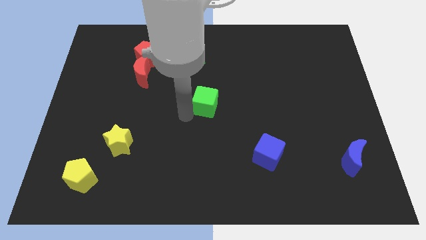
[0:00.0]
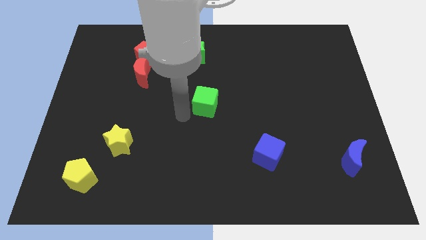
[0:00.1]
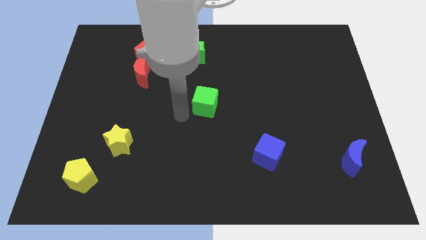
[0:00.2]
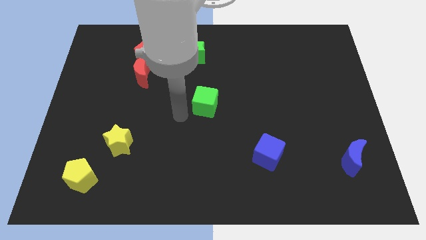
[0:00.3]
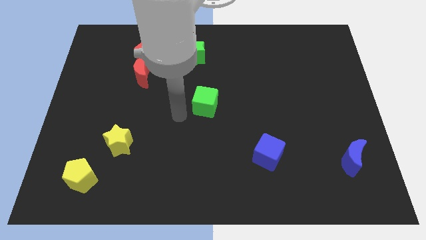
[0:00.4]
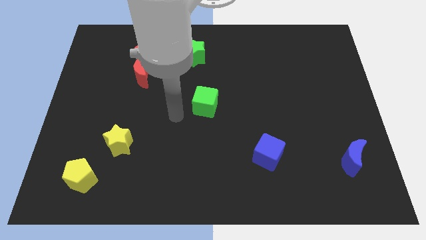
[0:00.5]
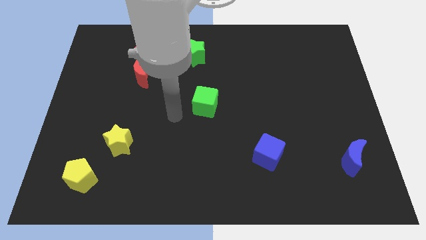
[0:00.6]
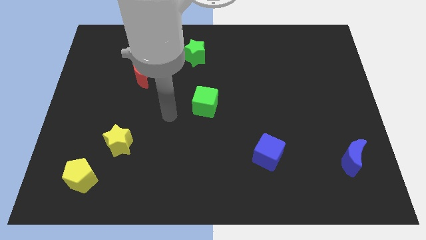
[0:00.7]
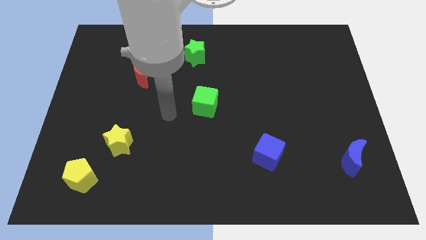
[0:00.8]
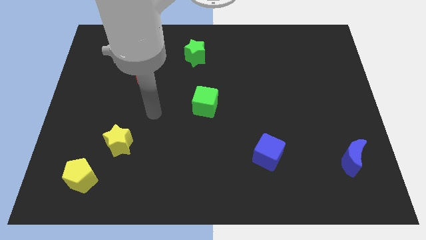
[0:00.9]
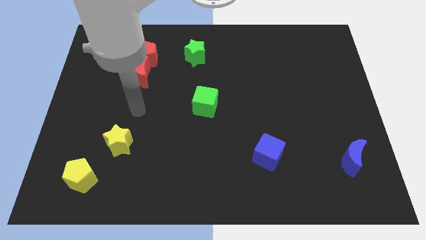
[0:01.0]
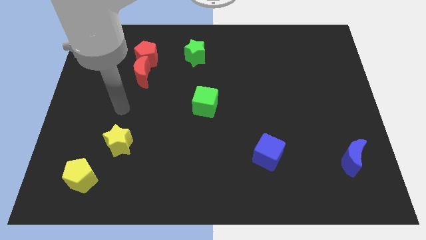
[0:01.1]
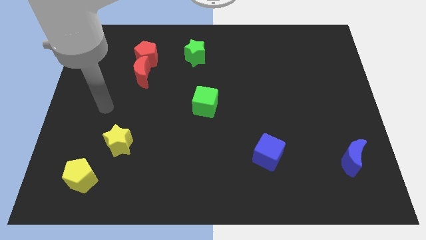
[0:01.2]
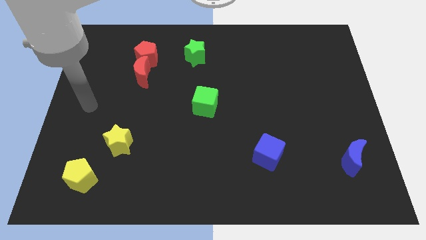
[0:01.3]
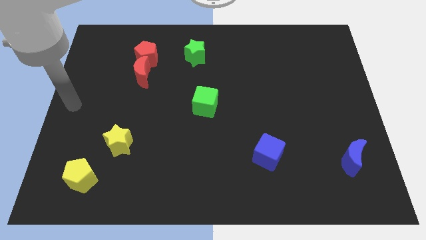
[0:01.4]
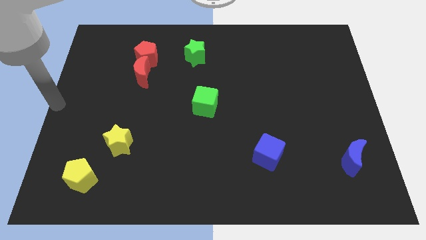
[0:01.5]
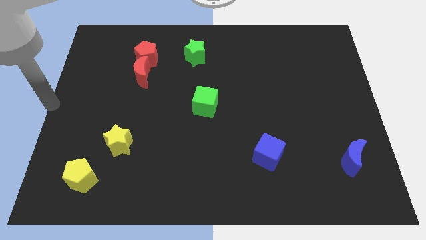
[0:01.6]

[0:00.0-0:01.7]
move your hand to the center left of the board

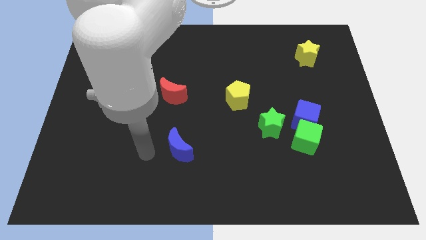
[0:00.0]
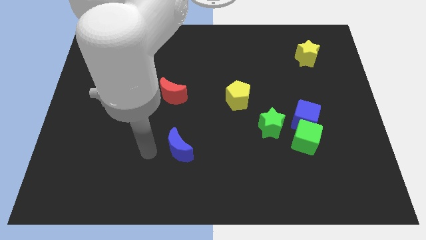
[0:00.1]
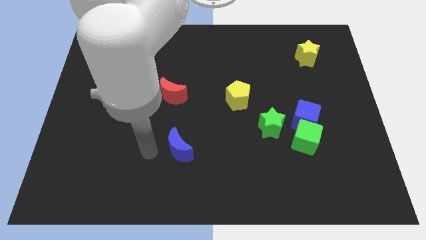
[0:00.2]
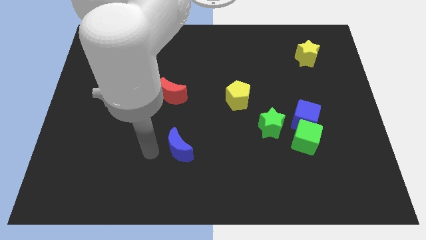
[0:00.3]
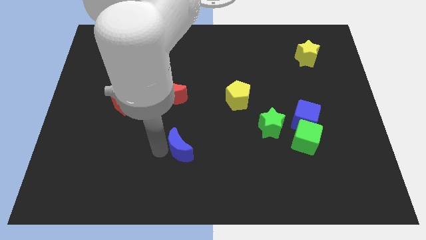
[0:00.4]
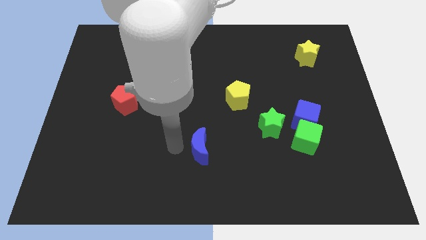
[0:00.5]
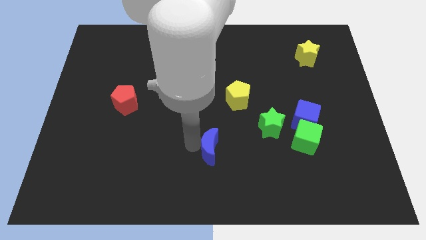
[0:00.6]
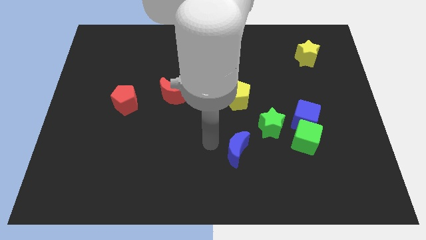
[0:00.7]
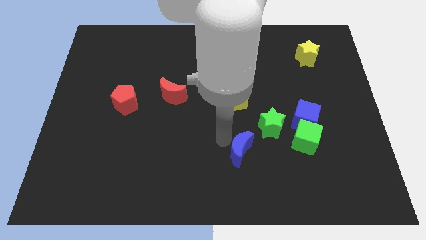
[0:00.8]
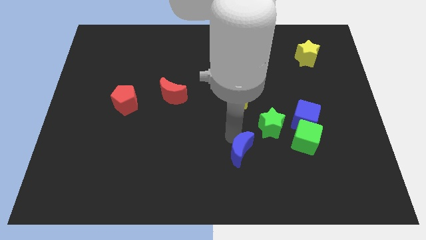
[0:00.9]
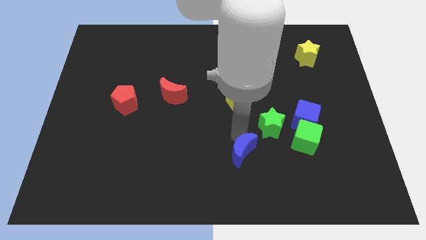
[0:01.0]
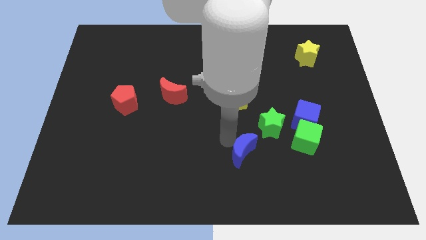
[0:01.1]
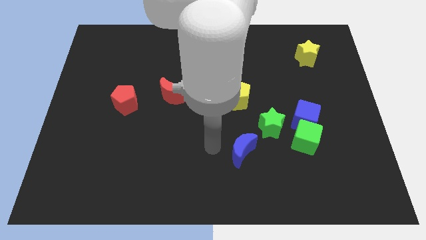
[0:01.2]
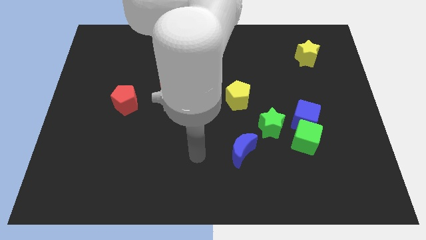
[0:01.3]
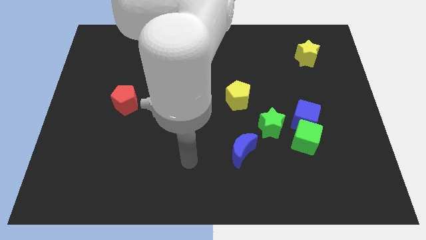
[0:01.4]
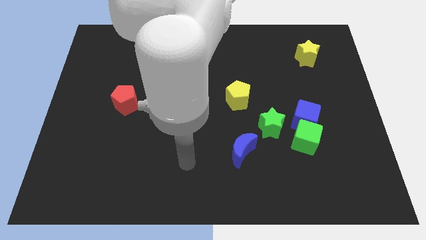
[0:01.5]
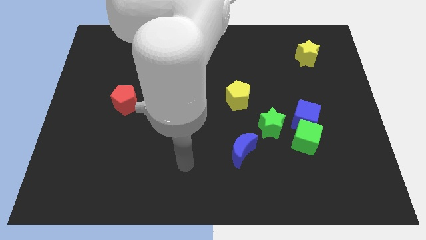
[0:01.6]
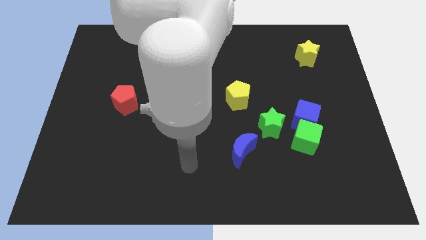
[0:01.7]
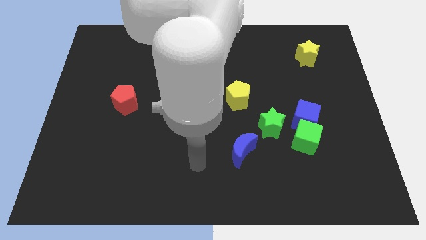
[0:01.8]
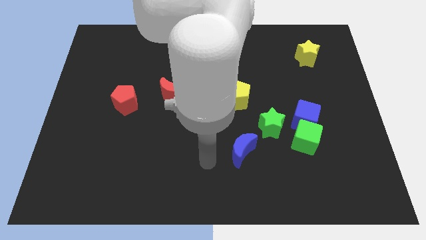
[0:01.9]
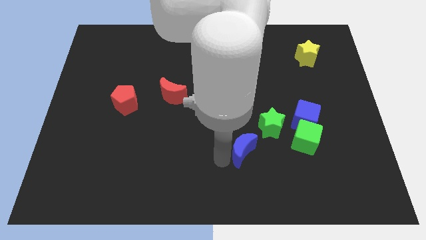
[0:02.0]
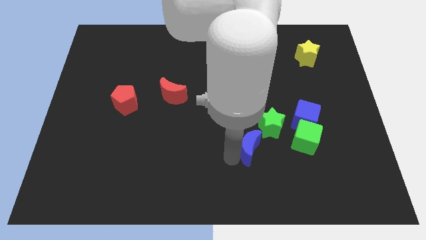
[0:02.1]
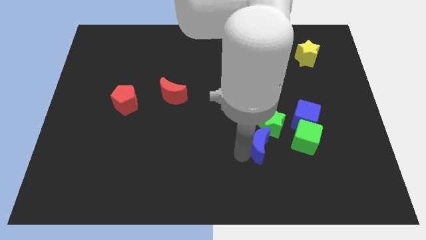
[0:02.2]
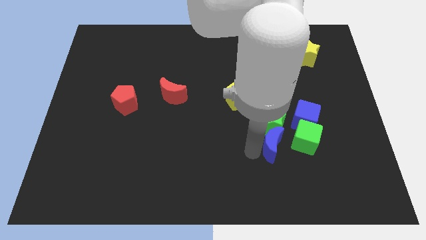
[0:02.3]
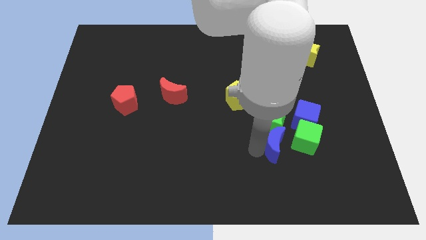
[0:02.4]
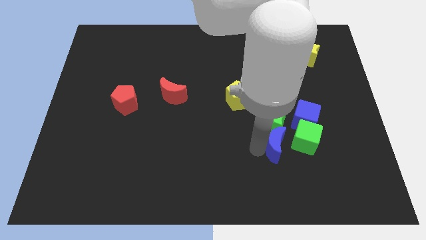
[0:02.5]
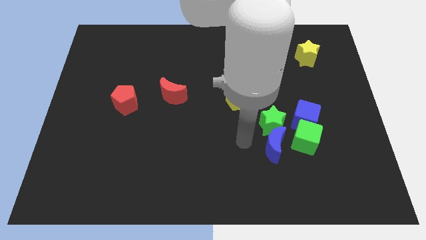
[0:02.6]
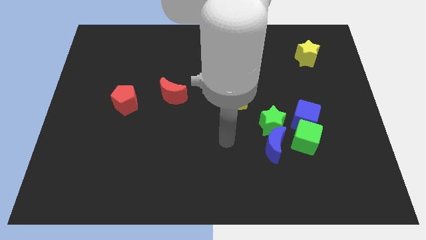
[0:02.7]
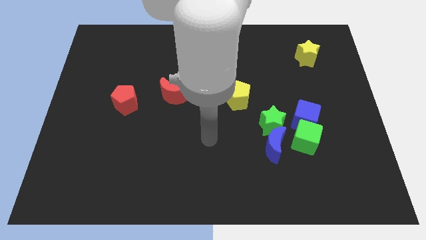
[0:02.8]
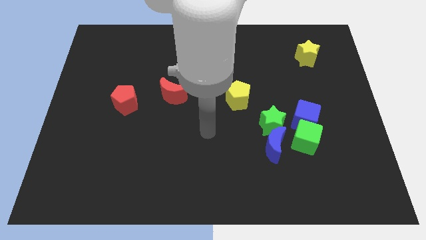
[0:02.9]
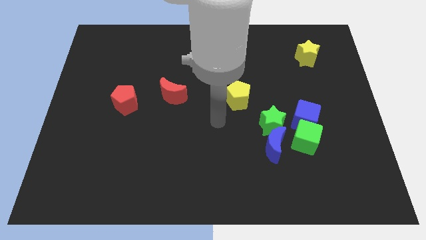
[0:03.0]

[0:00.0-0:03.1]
move the blue crescent to the bottom side of the green star

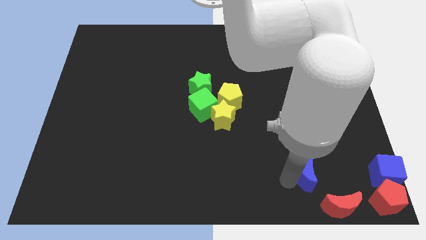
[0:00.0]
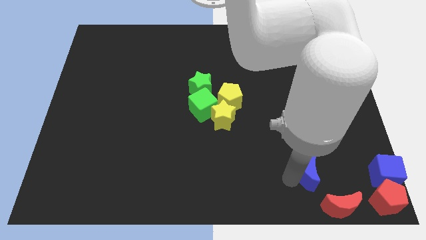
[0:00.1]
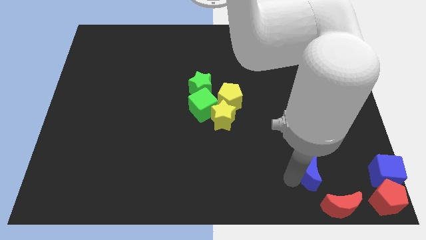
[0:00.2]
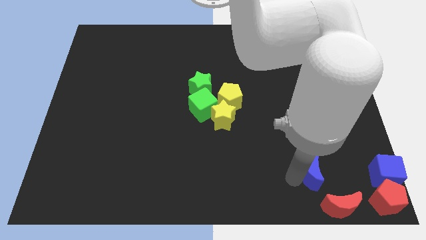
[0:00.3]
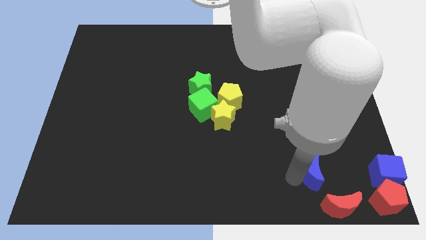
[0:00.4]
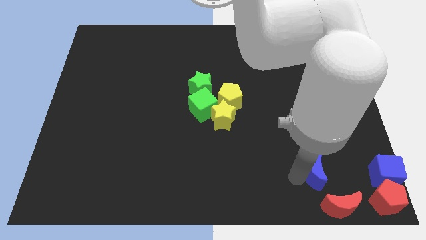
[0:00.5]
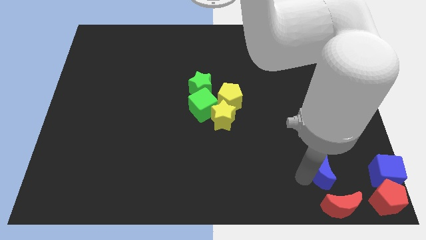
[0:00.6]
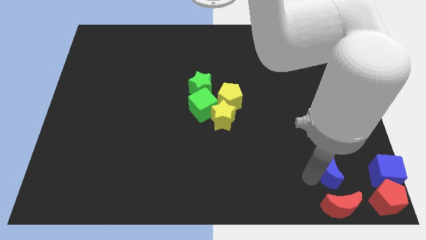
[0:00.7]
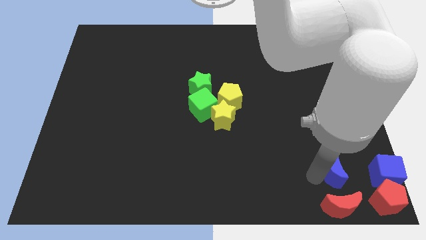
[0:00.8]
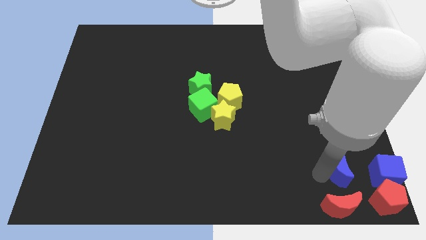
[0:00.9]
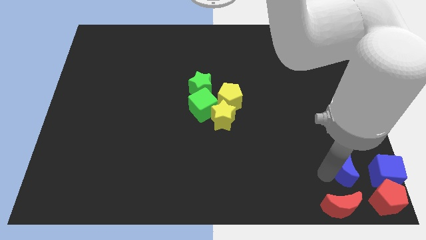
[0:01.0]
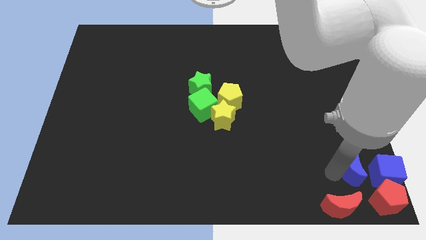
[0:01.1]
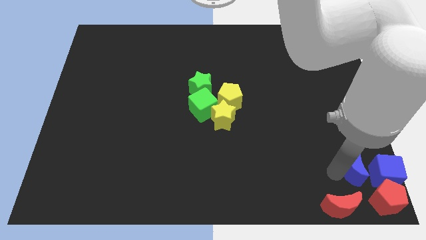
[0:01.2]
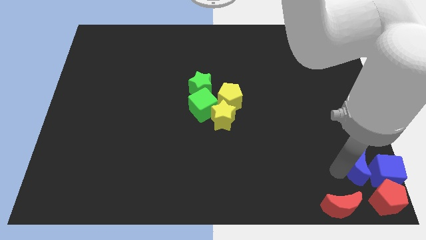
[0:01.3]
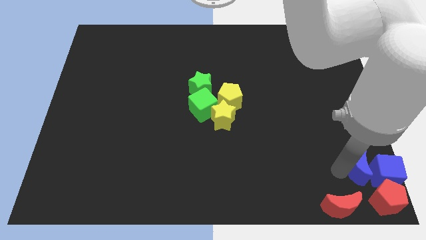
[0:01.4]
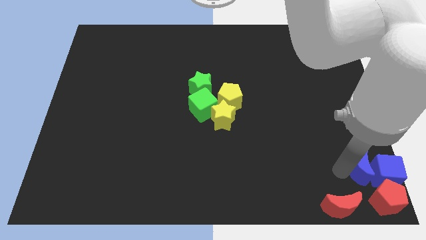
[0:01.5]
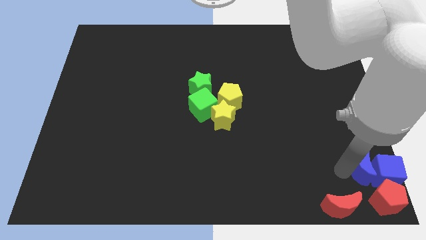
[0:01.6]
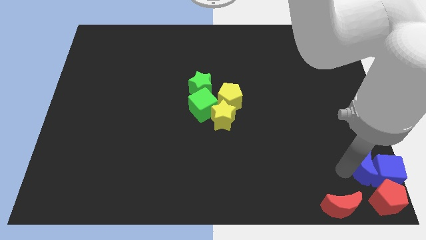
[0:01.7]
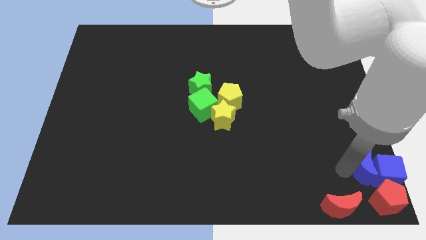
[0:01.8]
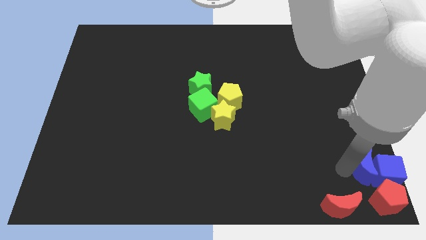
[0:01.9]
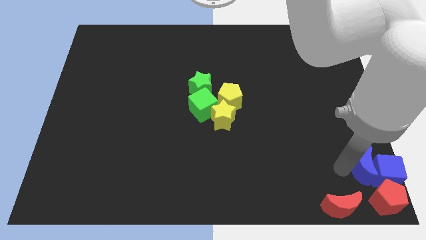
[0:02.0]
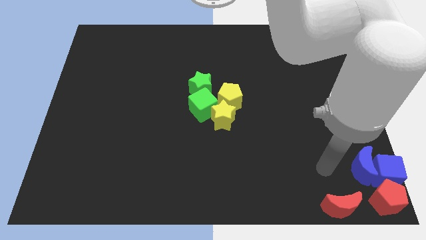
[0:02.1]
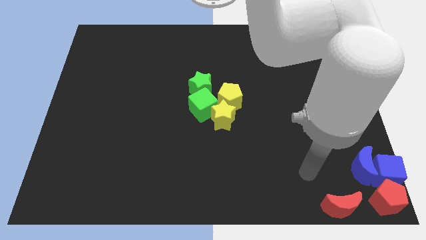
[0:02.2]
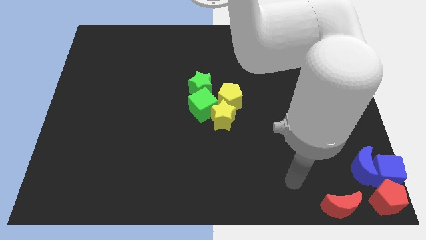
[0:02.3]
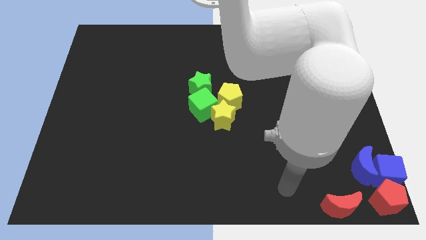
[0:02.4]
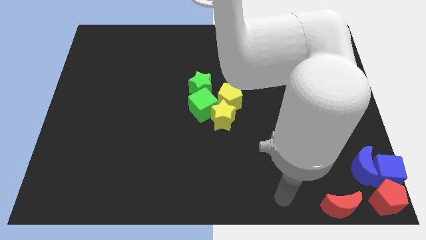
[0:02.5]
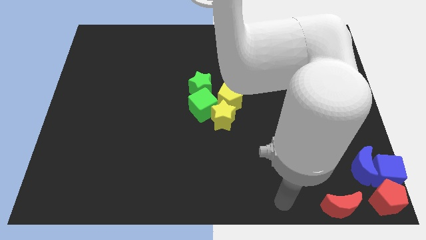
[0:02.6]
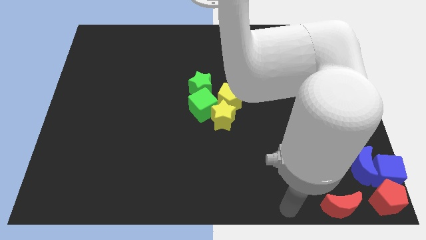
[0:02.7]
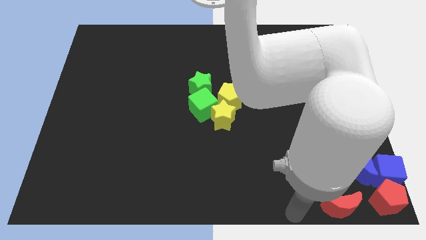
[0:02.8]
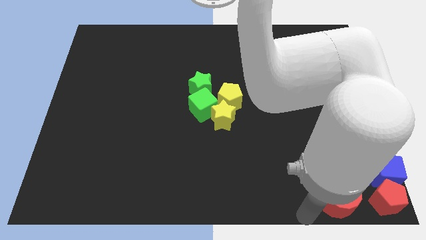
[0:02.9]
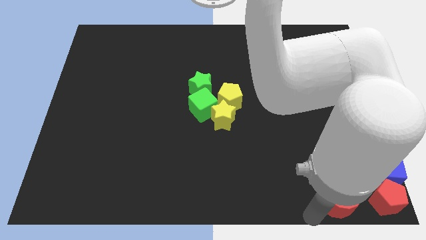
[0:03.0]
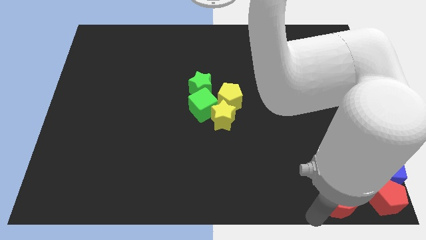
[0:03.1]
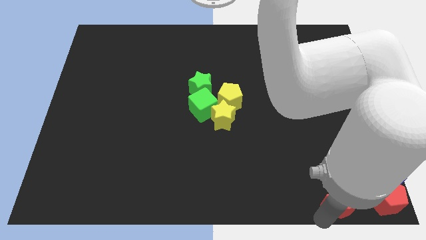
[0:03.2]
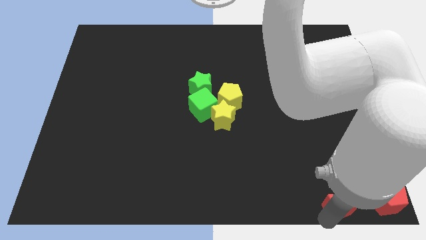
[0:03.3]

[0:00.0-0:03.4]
place the blue crescent close to the blue cube

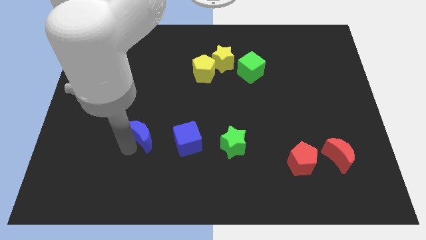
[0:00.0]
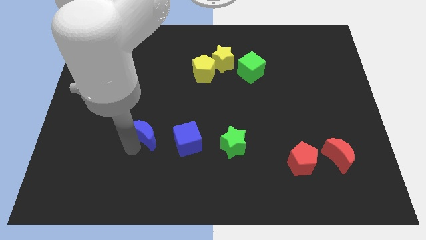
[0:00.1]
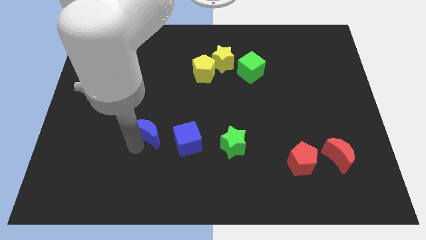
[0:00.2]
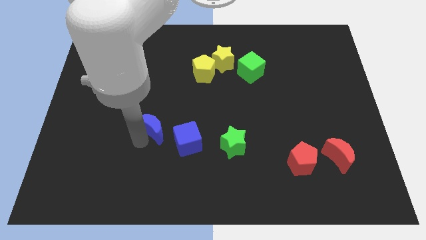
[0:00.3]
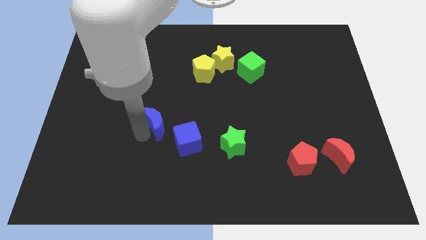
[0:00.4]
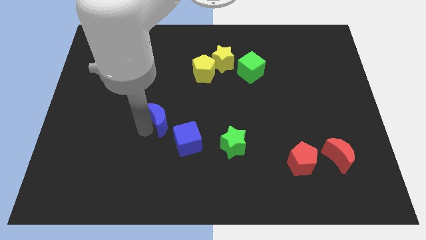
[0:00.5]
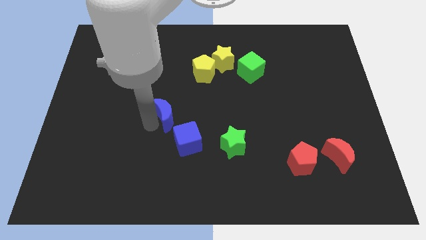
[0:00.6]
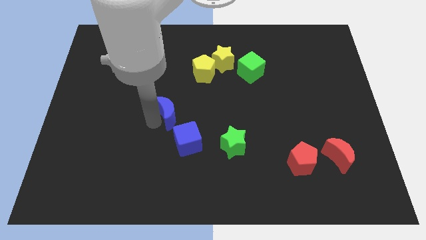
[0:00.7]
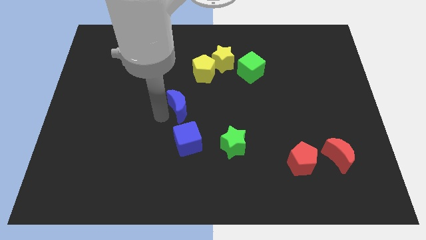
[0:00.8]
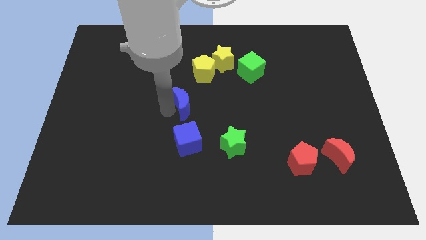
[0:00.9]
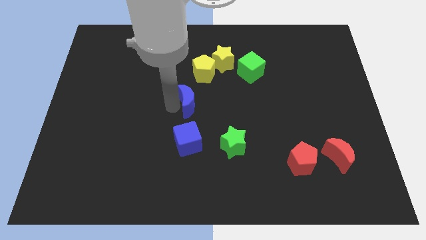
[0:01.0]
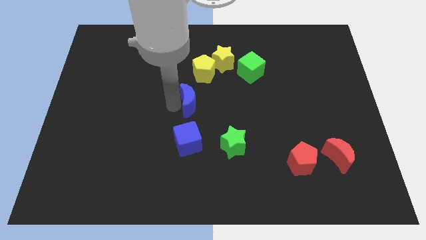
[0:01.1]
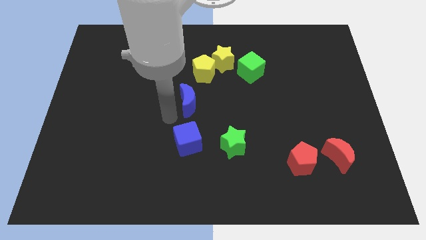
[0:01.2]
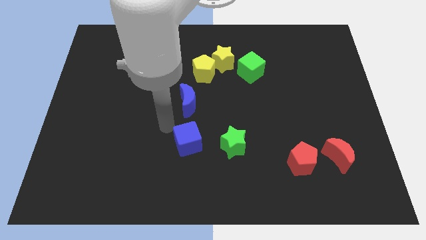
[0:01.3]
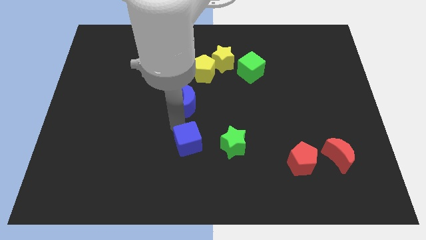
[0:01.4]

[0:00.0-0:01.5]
move the blue cube vertically to the top of the blue cube
